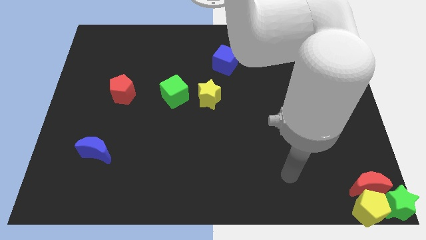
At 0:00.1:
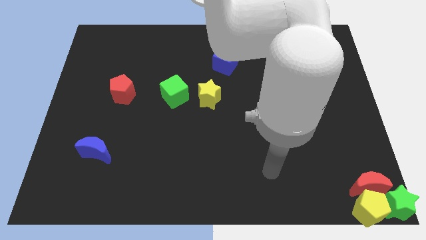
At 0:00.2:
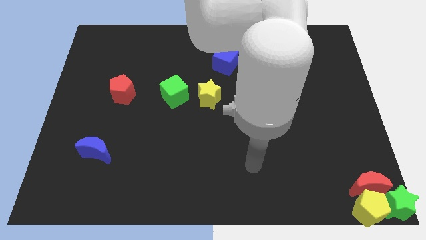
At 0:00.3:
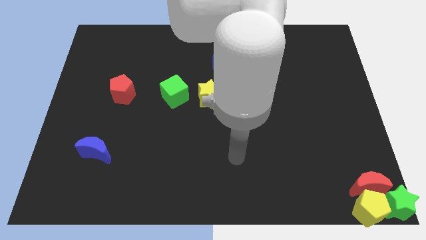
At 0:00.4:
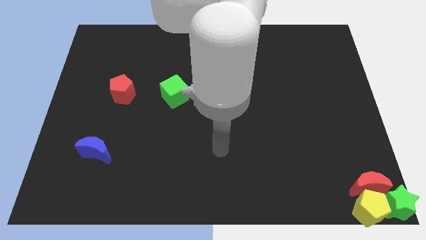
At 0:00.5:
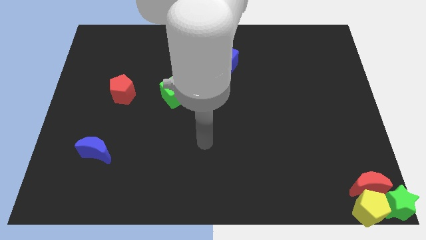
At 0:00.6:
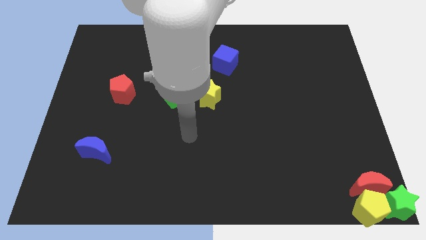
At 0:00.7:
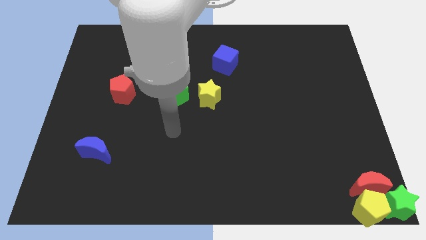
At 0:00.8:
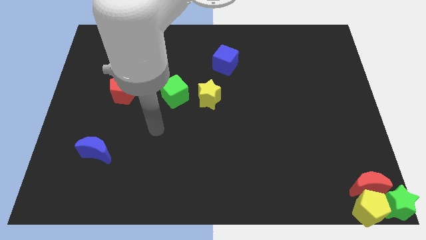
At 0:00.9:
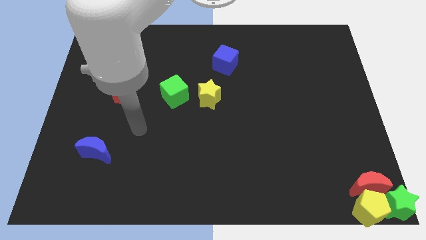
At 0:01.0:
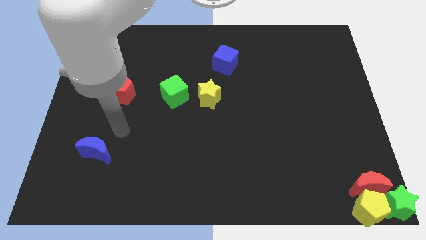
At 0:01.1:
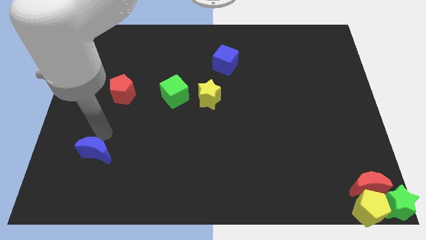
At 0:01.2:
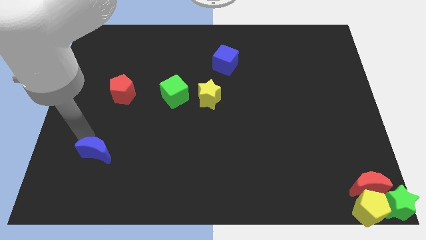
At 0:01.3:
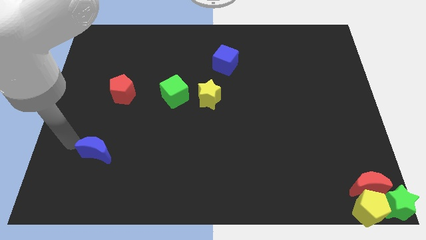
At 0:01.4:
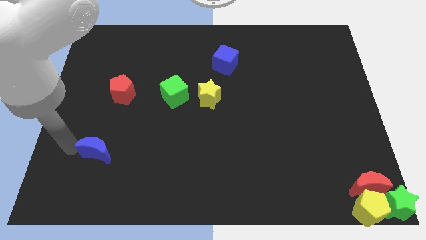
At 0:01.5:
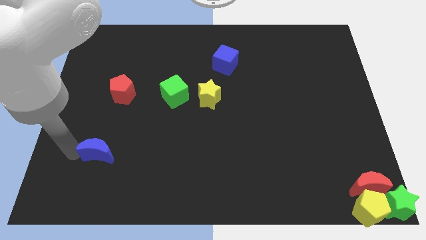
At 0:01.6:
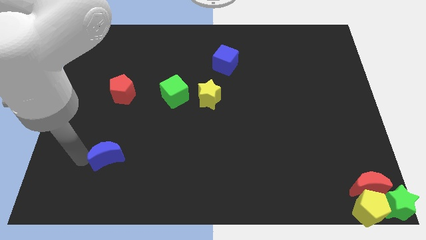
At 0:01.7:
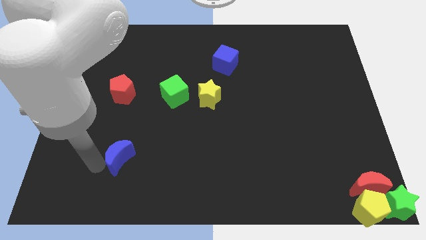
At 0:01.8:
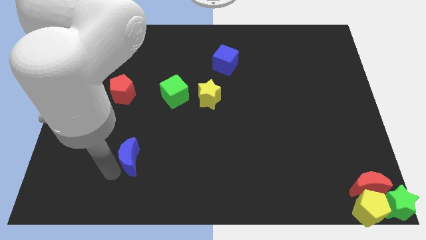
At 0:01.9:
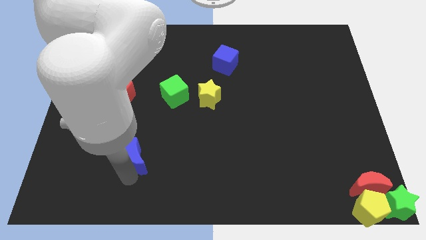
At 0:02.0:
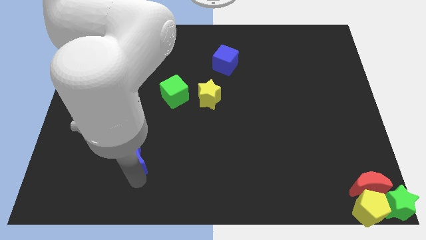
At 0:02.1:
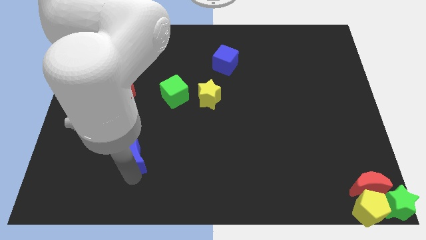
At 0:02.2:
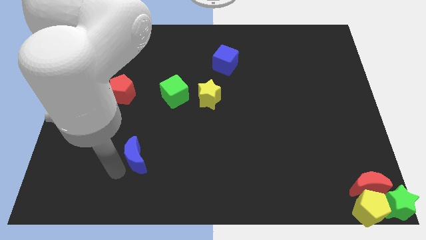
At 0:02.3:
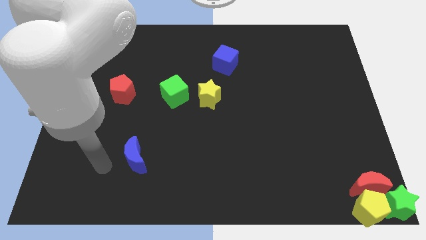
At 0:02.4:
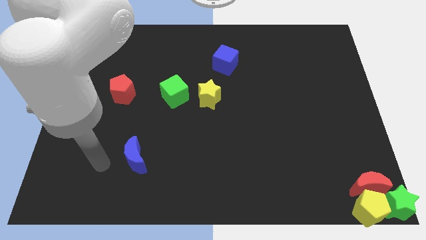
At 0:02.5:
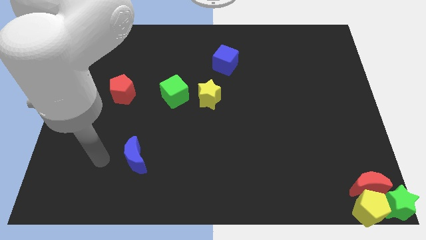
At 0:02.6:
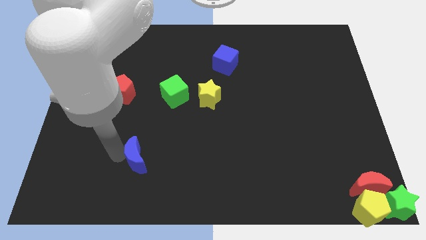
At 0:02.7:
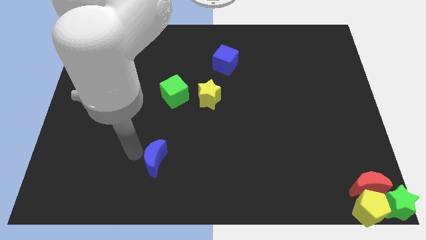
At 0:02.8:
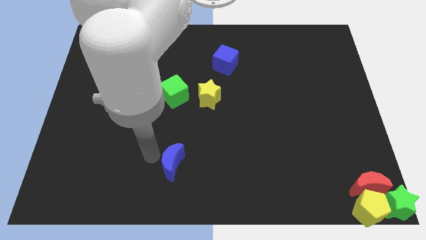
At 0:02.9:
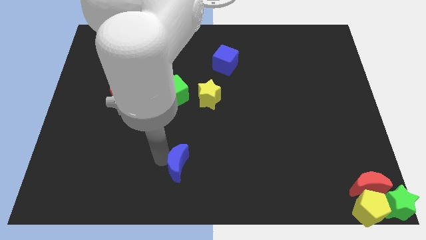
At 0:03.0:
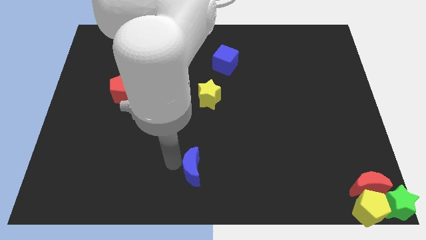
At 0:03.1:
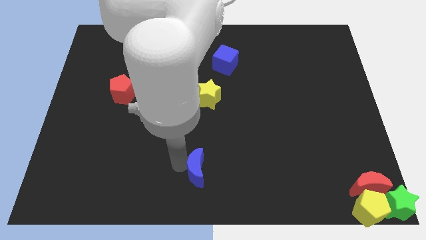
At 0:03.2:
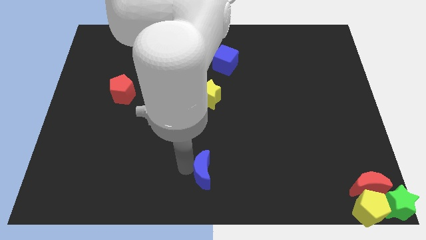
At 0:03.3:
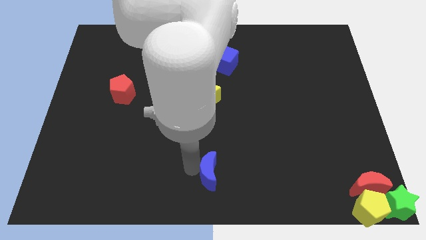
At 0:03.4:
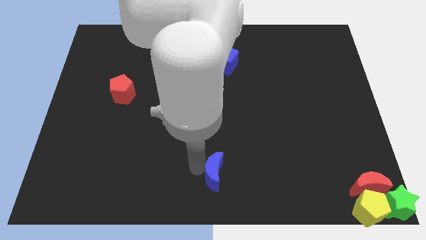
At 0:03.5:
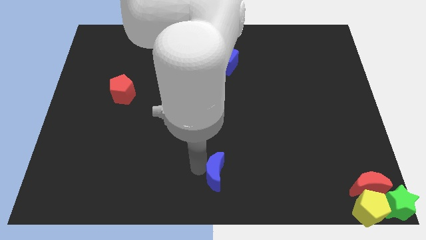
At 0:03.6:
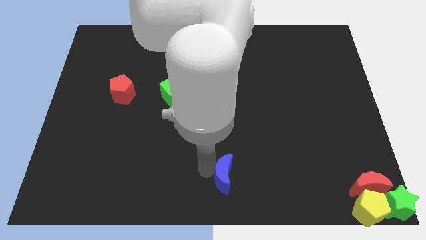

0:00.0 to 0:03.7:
move the blue moon to bottom middle of the board

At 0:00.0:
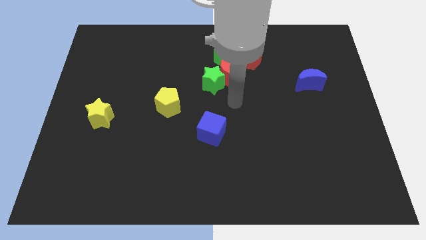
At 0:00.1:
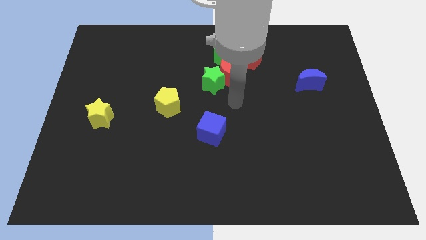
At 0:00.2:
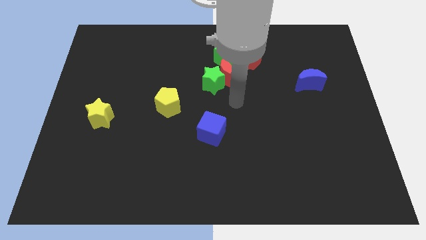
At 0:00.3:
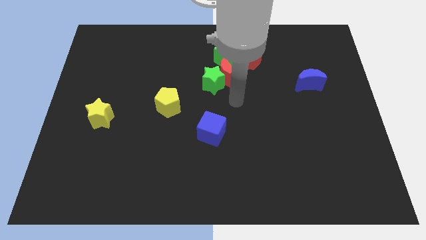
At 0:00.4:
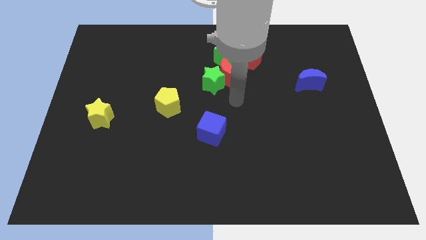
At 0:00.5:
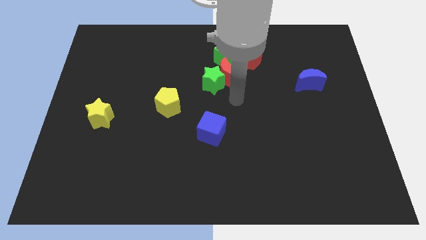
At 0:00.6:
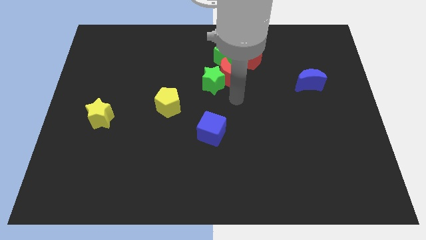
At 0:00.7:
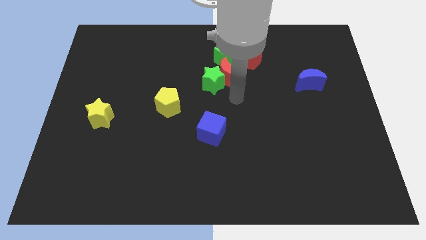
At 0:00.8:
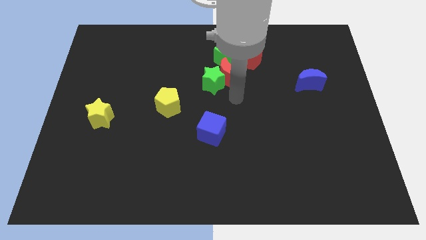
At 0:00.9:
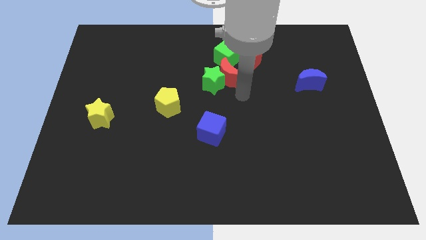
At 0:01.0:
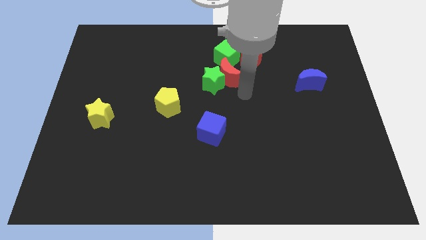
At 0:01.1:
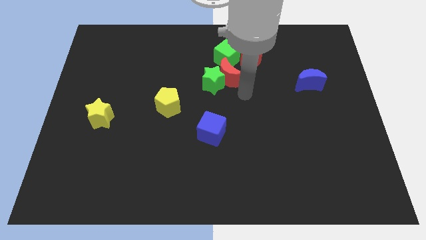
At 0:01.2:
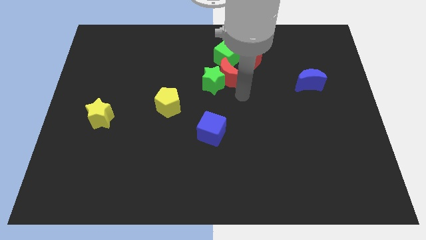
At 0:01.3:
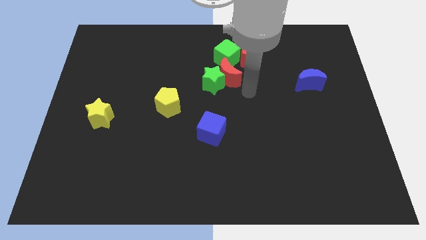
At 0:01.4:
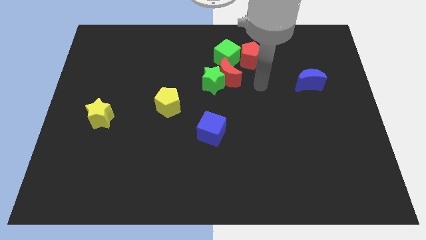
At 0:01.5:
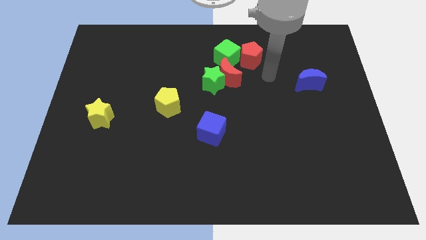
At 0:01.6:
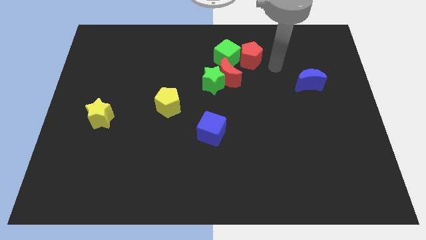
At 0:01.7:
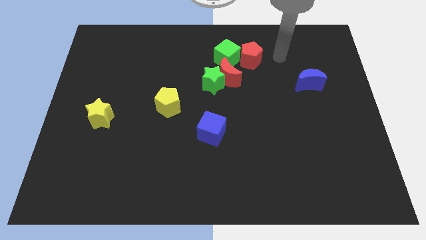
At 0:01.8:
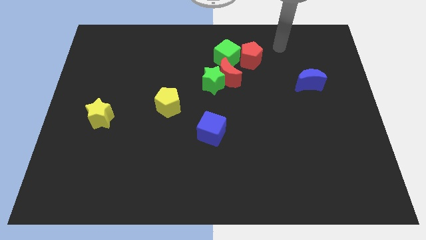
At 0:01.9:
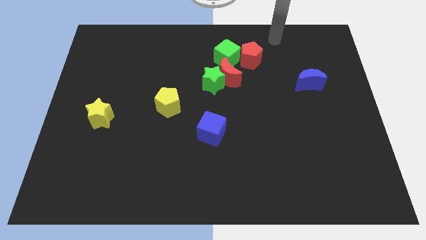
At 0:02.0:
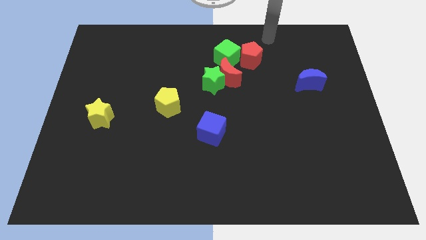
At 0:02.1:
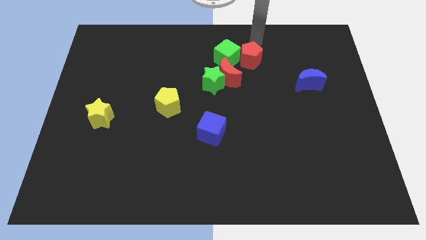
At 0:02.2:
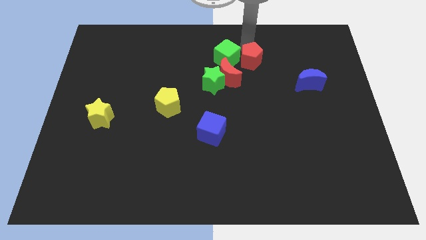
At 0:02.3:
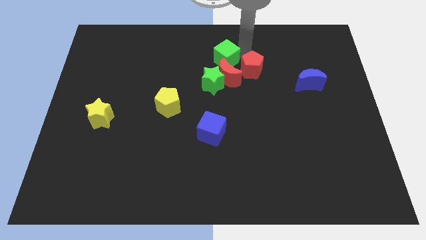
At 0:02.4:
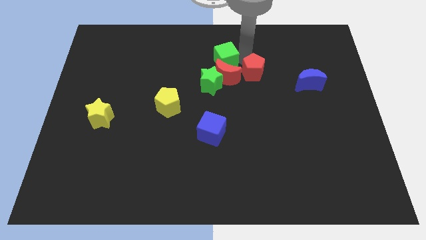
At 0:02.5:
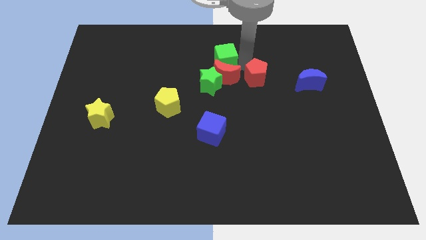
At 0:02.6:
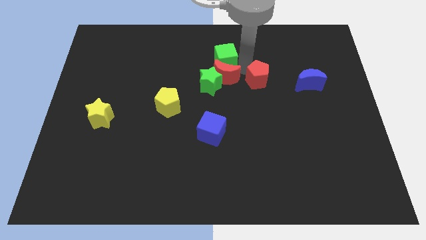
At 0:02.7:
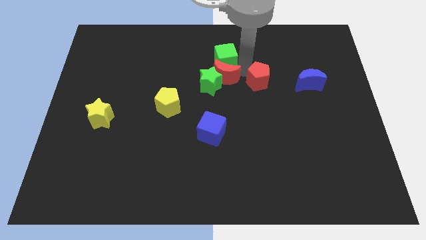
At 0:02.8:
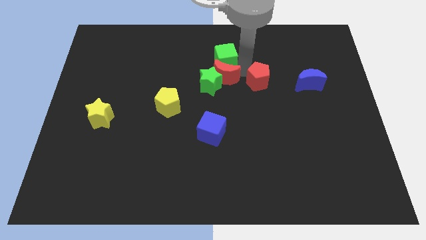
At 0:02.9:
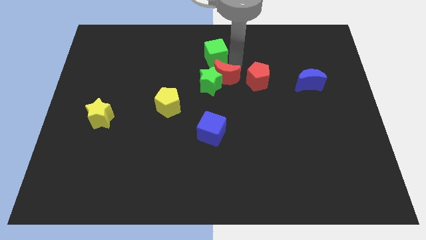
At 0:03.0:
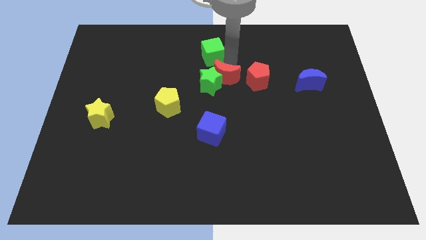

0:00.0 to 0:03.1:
separate the green cube and the red pentagon

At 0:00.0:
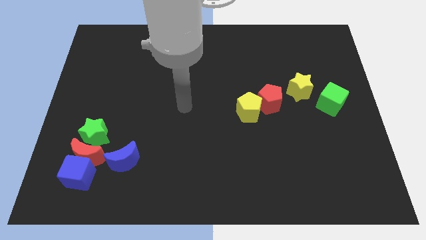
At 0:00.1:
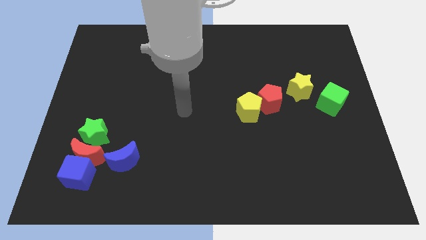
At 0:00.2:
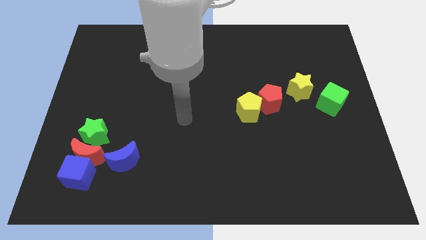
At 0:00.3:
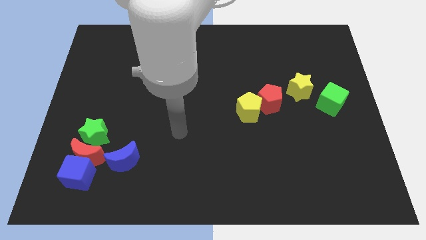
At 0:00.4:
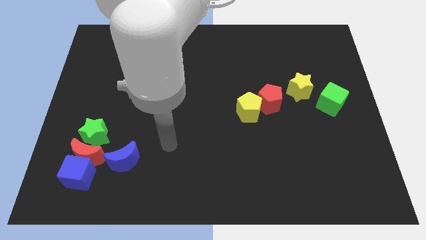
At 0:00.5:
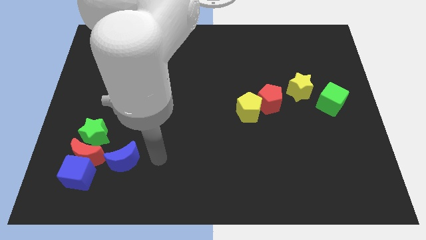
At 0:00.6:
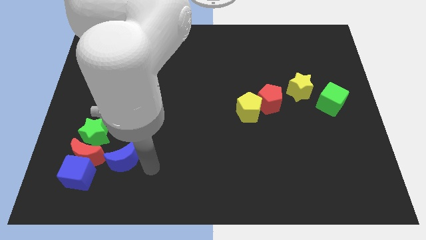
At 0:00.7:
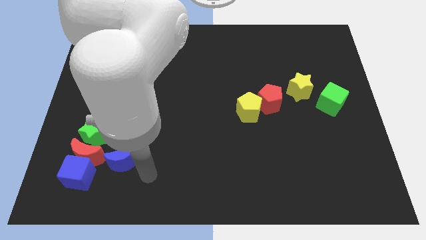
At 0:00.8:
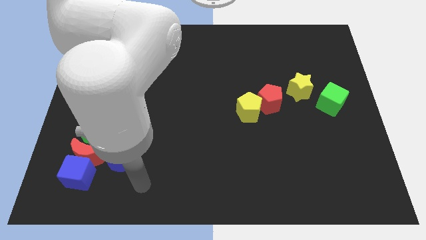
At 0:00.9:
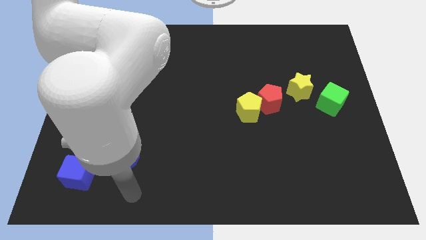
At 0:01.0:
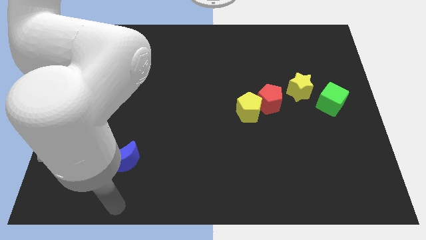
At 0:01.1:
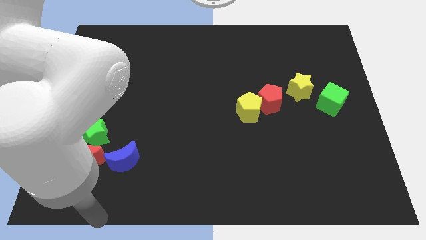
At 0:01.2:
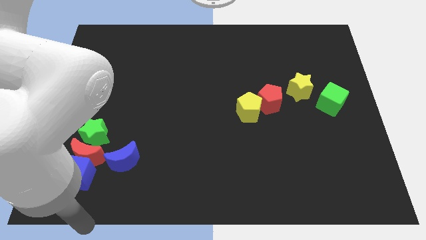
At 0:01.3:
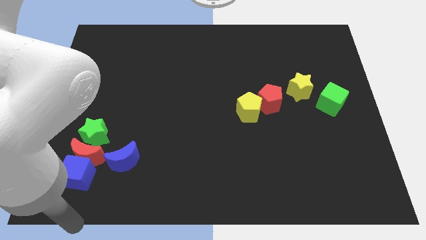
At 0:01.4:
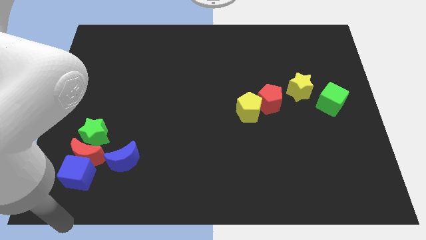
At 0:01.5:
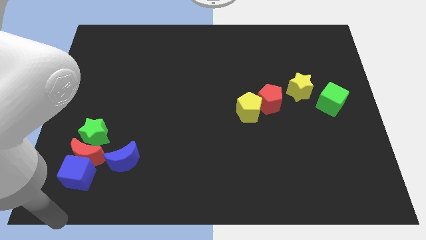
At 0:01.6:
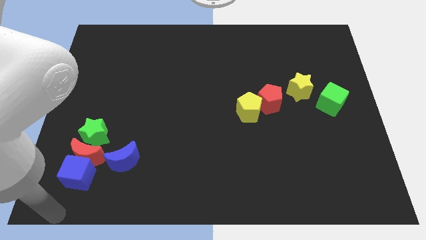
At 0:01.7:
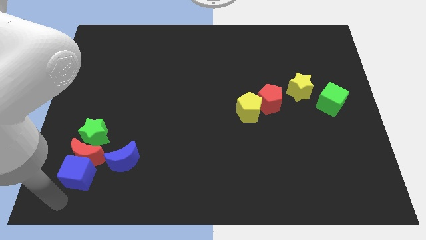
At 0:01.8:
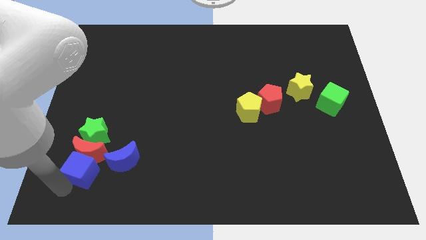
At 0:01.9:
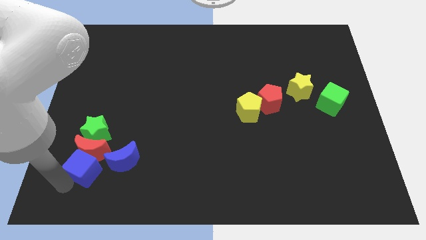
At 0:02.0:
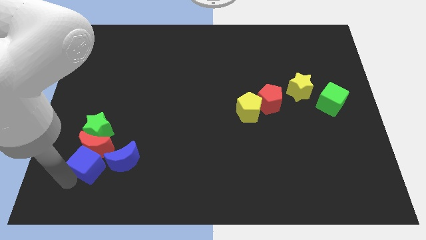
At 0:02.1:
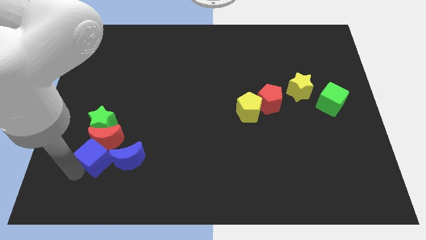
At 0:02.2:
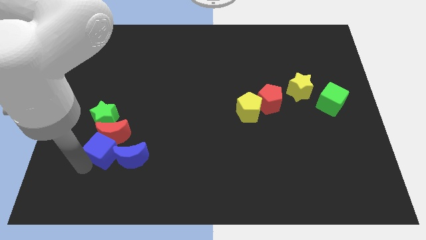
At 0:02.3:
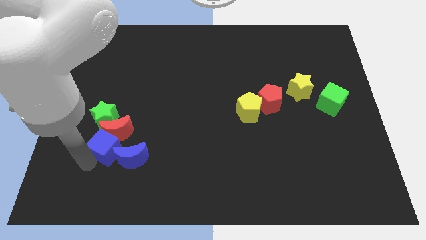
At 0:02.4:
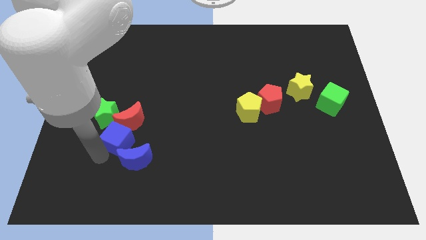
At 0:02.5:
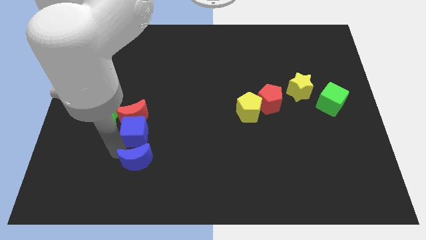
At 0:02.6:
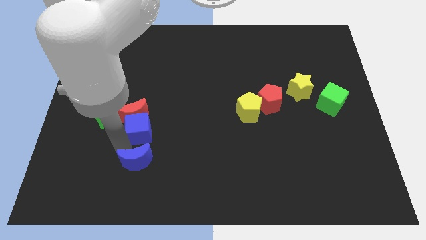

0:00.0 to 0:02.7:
place the blue cube above the blue crescent
